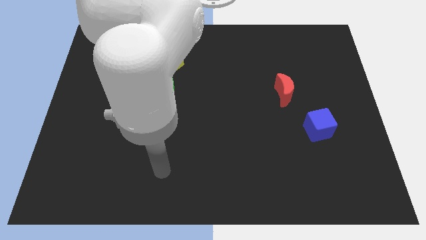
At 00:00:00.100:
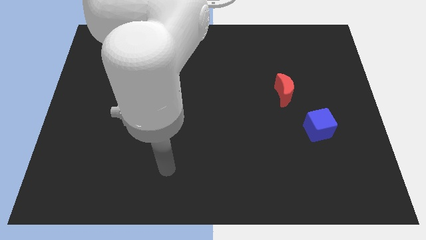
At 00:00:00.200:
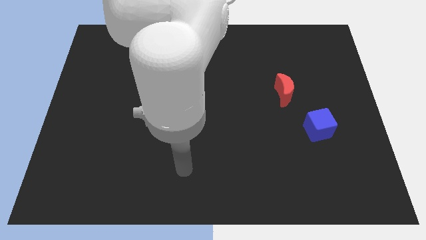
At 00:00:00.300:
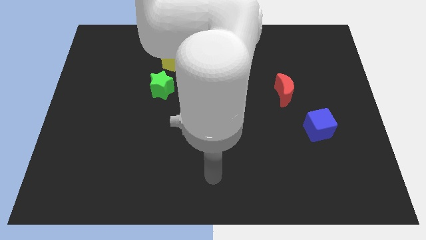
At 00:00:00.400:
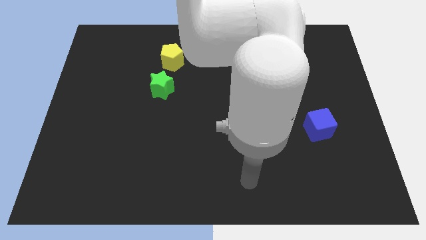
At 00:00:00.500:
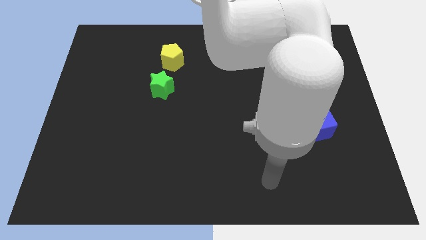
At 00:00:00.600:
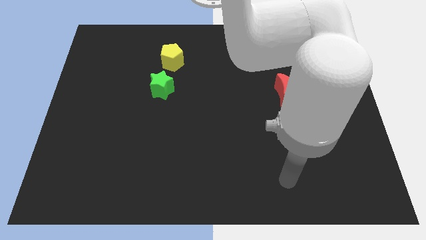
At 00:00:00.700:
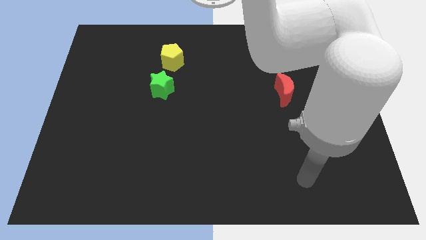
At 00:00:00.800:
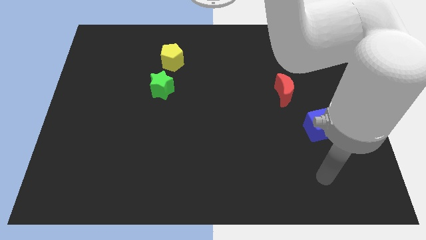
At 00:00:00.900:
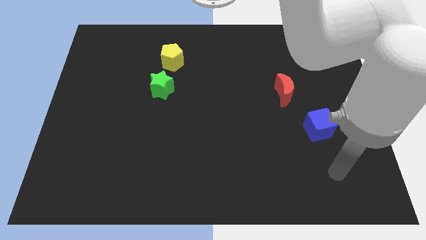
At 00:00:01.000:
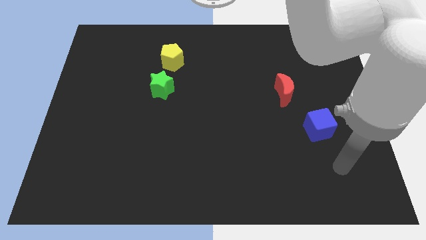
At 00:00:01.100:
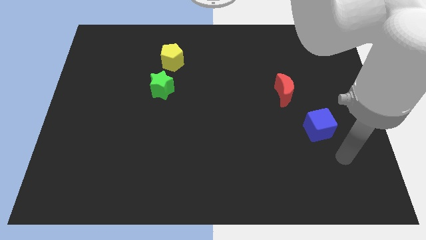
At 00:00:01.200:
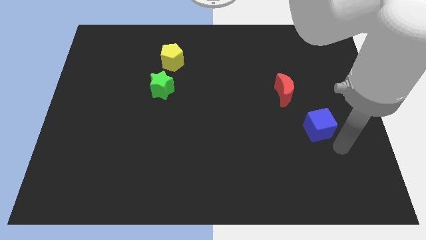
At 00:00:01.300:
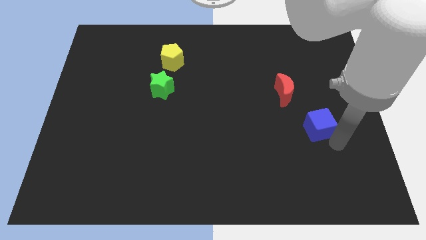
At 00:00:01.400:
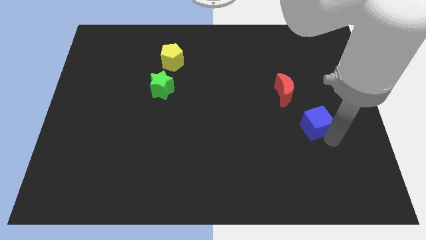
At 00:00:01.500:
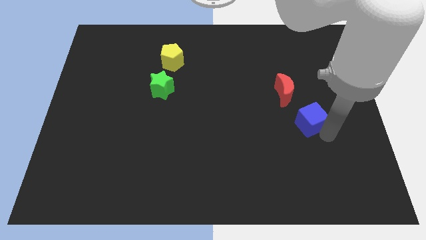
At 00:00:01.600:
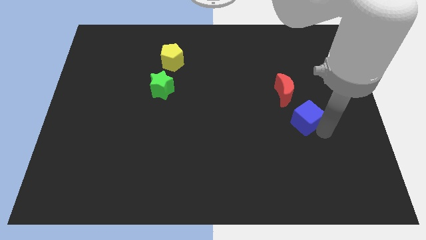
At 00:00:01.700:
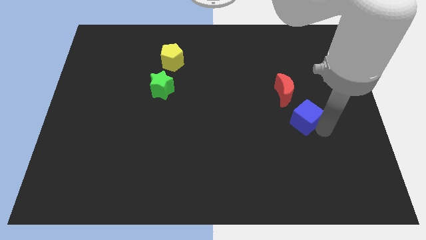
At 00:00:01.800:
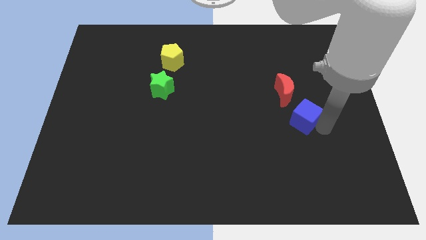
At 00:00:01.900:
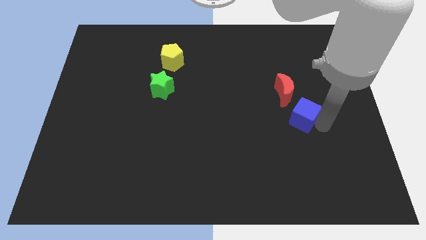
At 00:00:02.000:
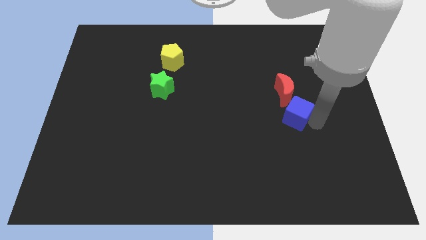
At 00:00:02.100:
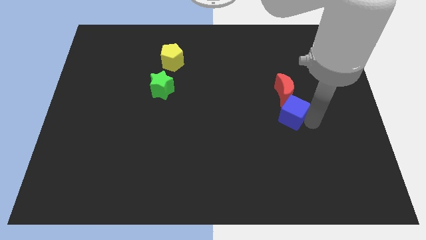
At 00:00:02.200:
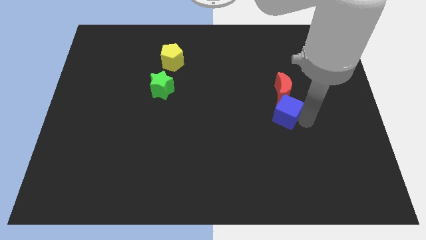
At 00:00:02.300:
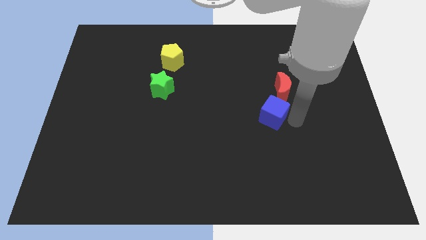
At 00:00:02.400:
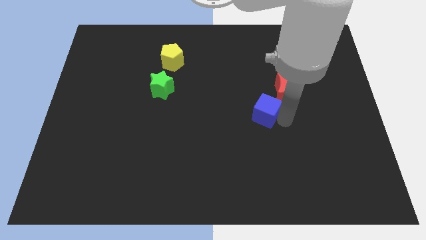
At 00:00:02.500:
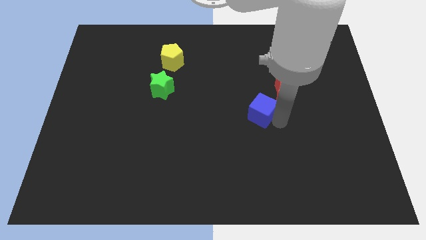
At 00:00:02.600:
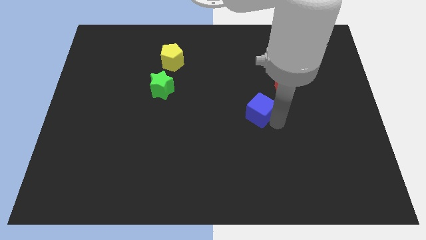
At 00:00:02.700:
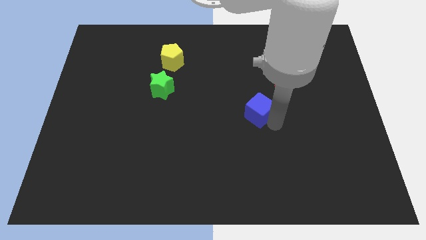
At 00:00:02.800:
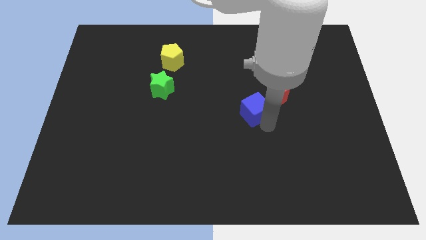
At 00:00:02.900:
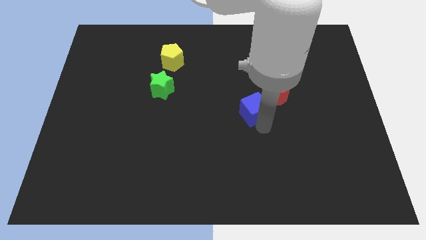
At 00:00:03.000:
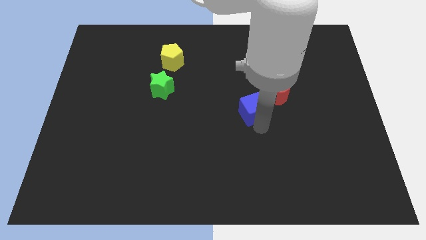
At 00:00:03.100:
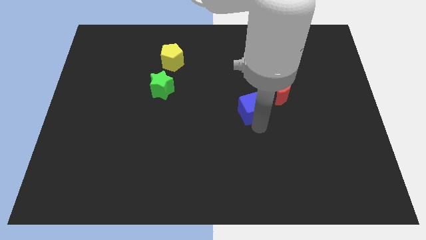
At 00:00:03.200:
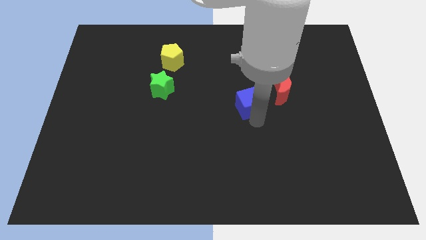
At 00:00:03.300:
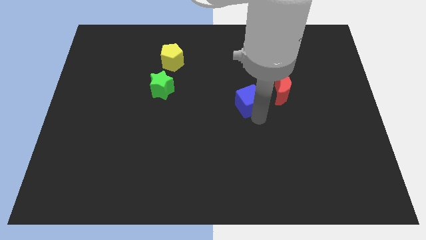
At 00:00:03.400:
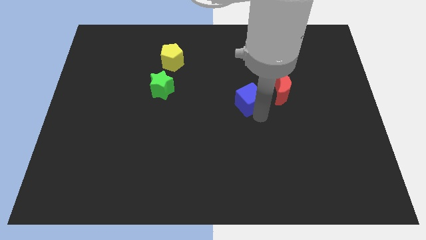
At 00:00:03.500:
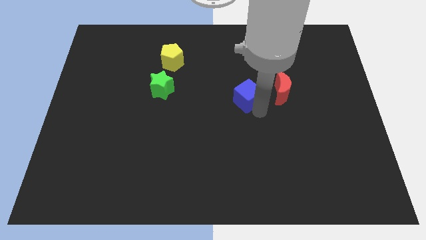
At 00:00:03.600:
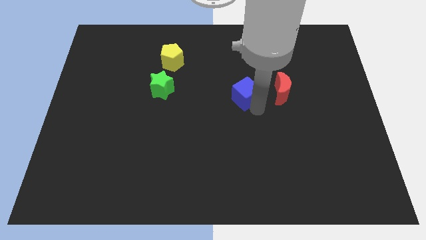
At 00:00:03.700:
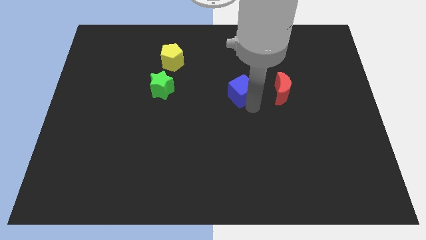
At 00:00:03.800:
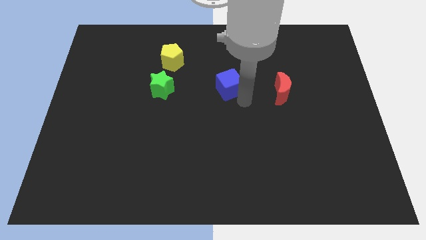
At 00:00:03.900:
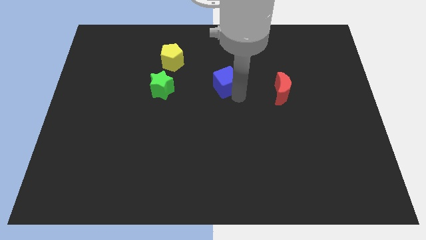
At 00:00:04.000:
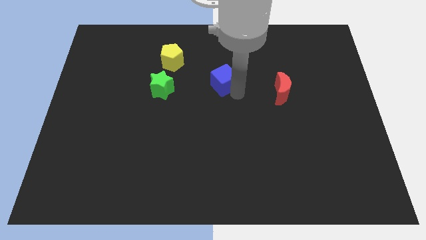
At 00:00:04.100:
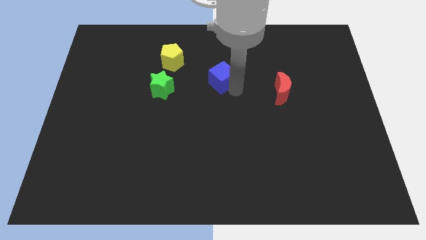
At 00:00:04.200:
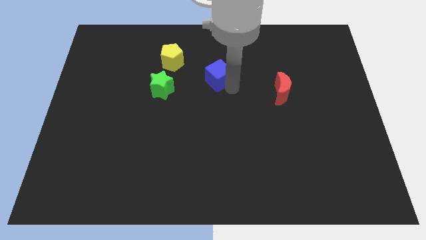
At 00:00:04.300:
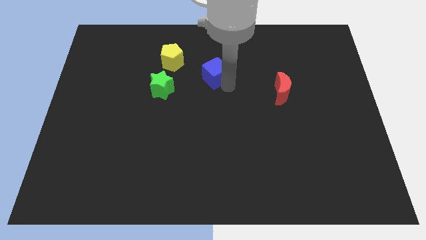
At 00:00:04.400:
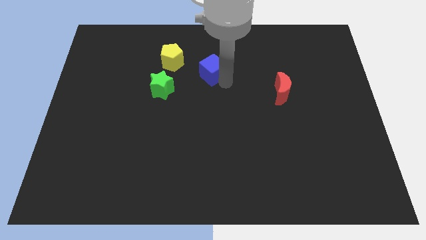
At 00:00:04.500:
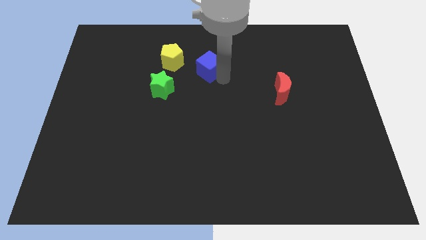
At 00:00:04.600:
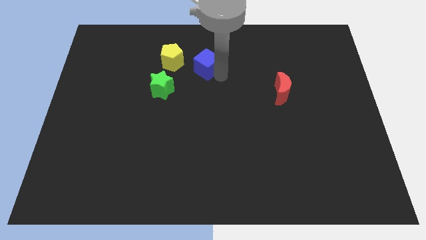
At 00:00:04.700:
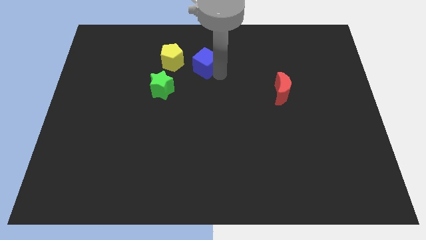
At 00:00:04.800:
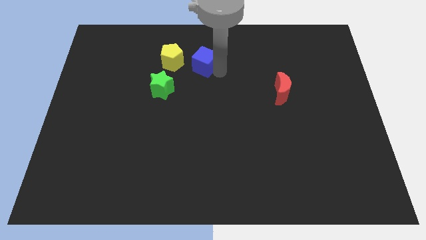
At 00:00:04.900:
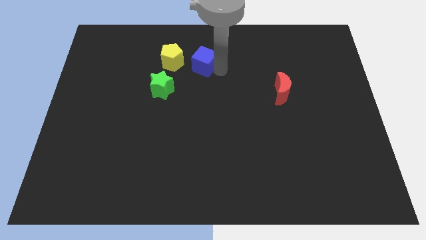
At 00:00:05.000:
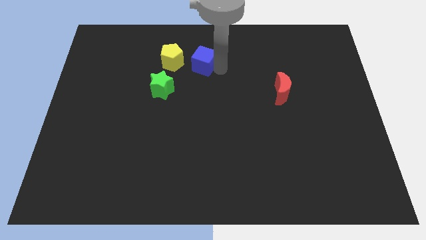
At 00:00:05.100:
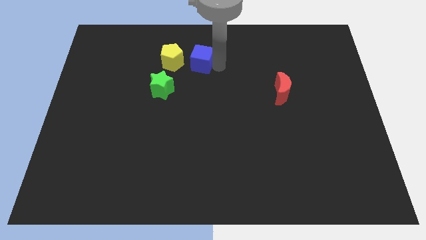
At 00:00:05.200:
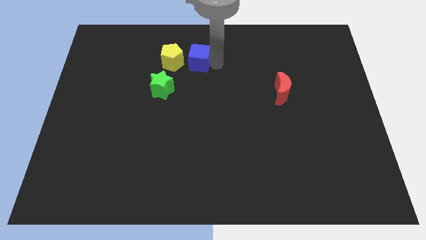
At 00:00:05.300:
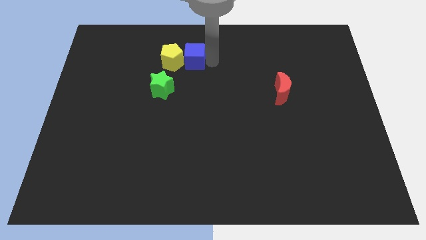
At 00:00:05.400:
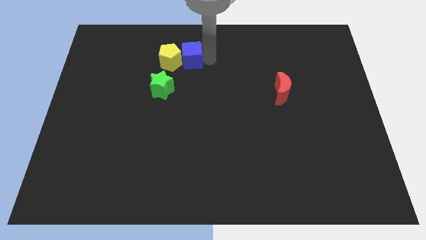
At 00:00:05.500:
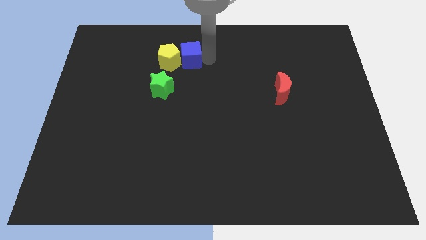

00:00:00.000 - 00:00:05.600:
move the blue cube towards the pentagon

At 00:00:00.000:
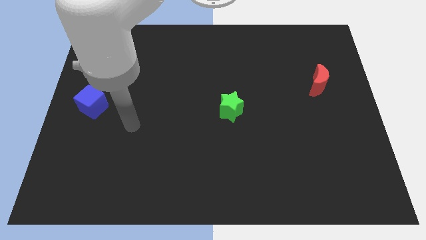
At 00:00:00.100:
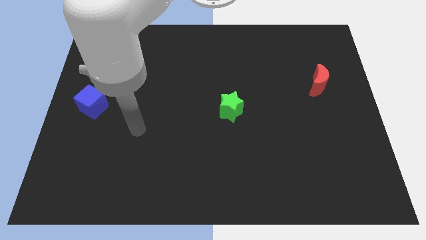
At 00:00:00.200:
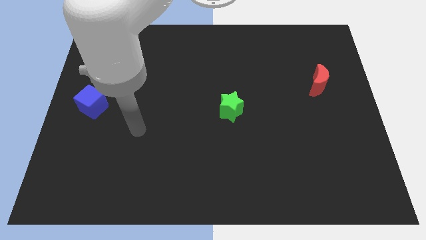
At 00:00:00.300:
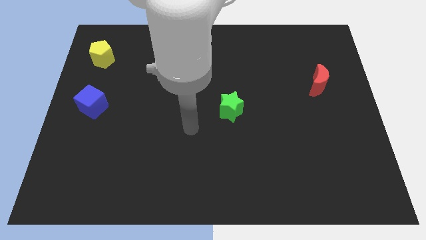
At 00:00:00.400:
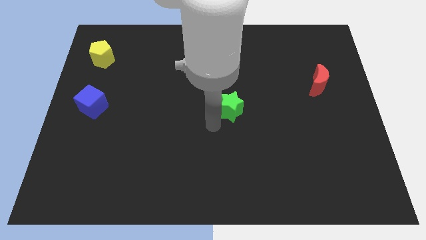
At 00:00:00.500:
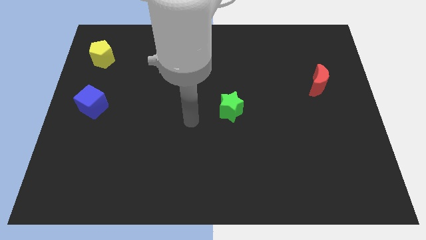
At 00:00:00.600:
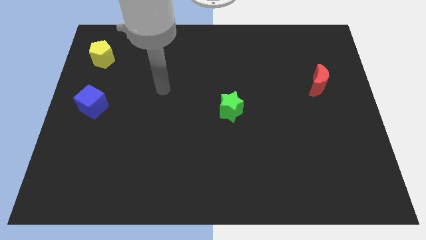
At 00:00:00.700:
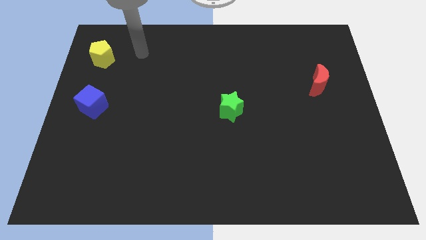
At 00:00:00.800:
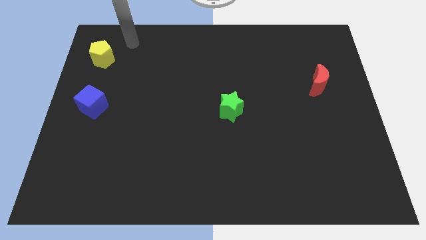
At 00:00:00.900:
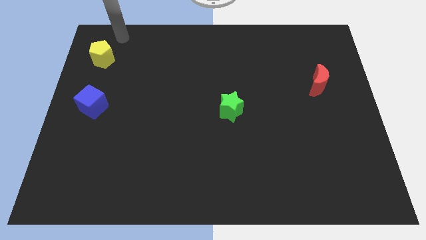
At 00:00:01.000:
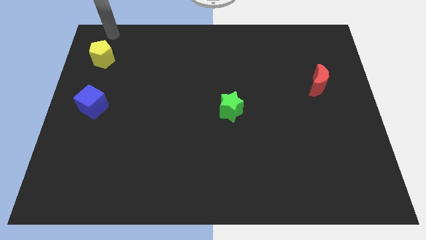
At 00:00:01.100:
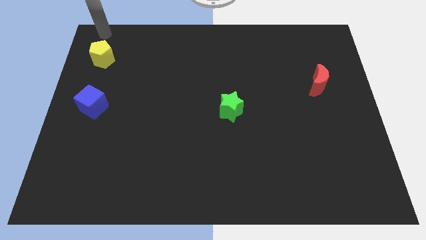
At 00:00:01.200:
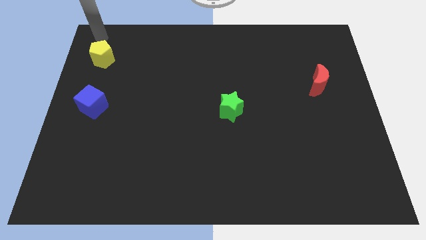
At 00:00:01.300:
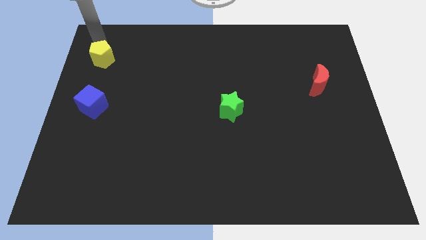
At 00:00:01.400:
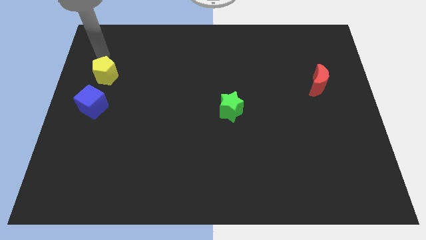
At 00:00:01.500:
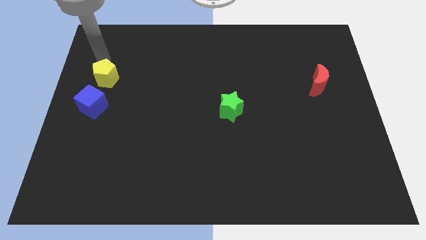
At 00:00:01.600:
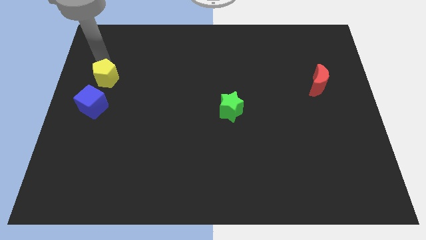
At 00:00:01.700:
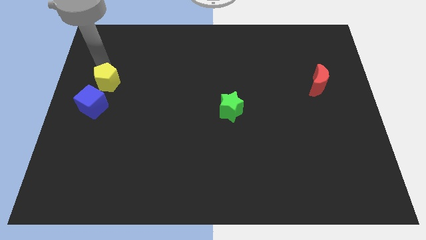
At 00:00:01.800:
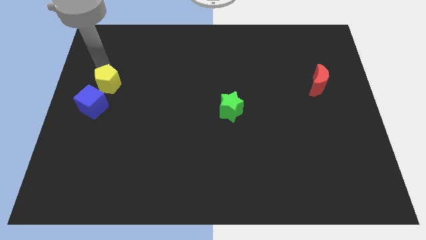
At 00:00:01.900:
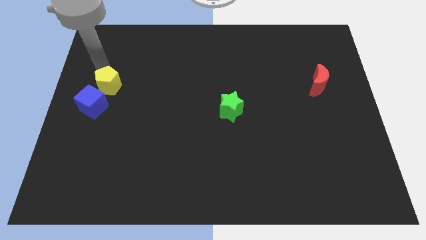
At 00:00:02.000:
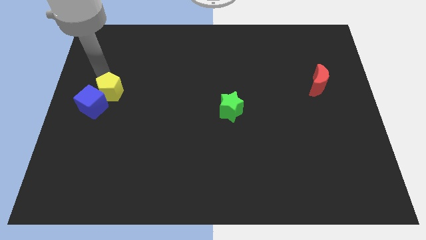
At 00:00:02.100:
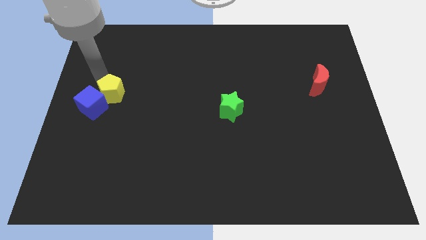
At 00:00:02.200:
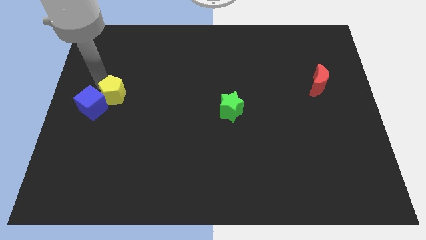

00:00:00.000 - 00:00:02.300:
move the pentagon to the blue cube

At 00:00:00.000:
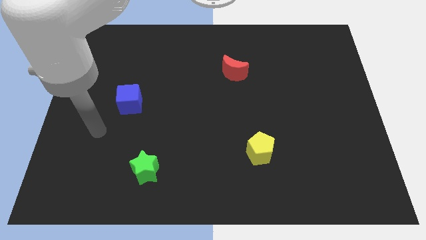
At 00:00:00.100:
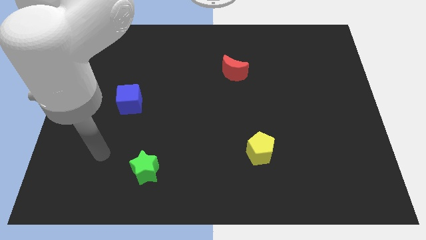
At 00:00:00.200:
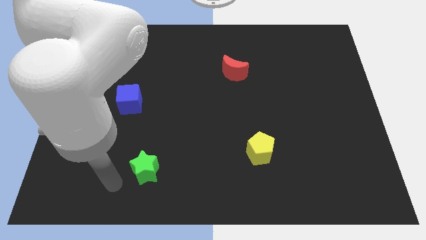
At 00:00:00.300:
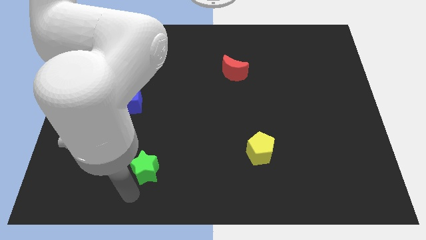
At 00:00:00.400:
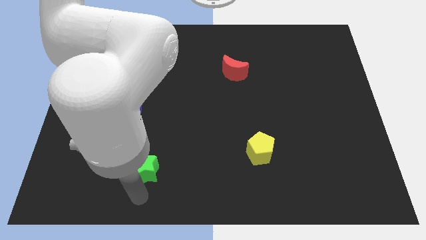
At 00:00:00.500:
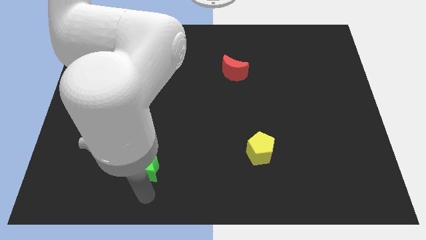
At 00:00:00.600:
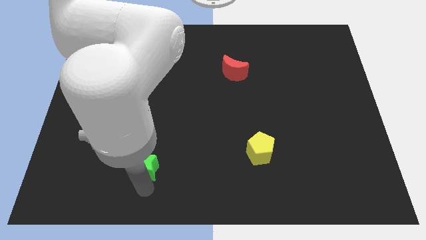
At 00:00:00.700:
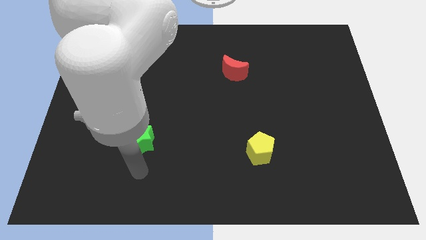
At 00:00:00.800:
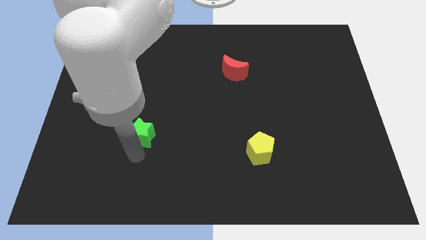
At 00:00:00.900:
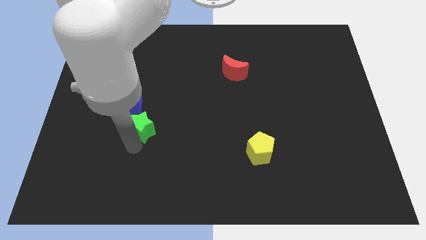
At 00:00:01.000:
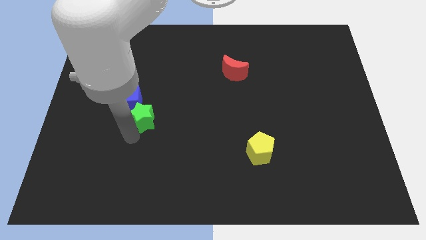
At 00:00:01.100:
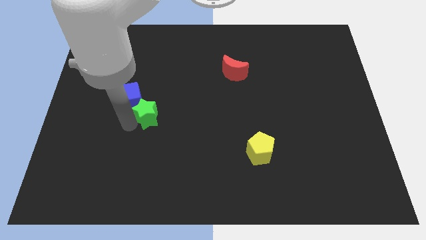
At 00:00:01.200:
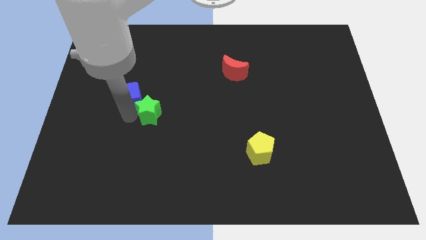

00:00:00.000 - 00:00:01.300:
move the star towards the blue block
